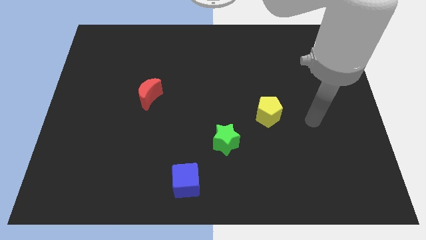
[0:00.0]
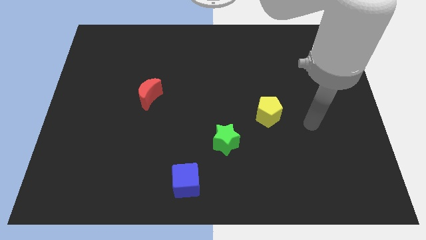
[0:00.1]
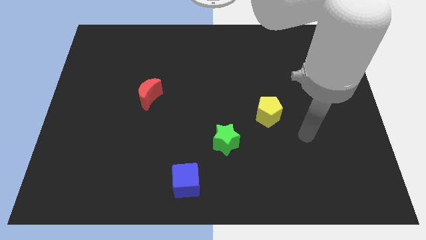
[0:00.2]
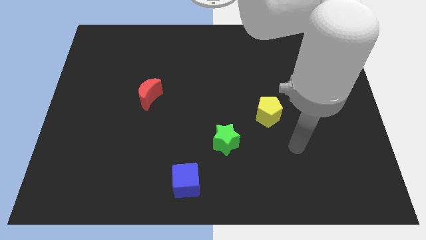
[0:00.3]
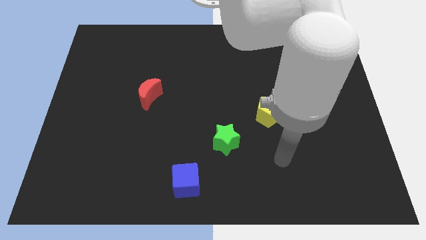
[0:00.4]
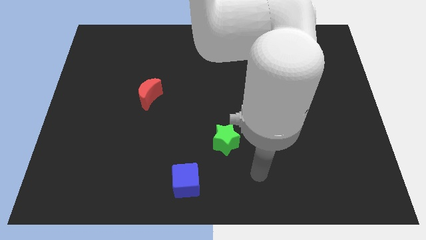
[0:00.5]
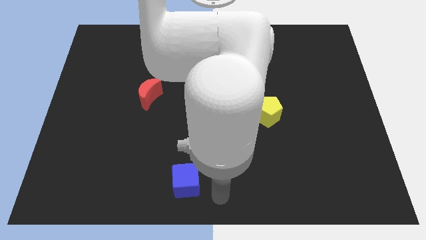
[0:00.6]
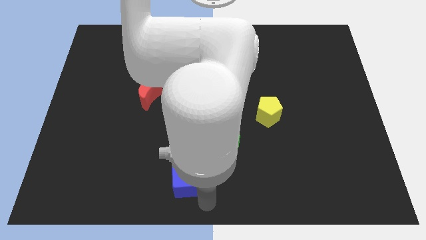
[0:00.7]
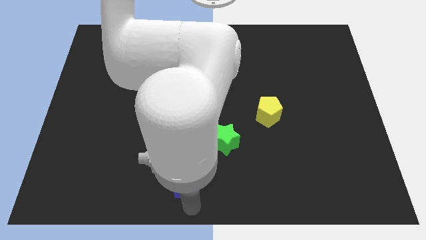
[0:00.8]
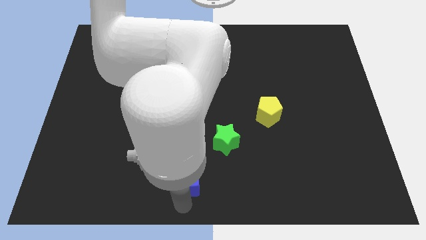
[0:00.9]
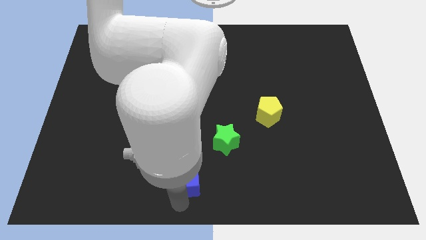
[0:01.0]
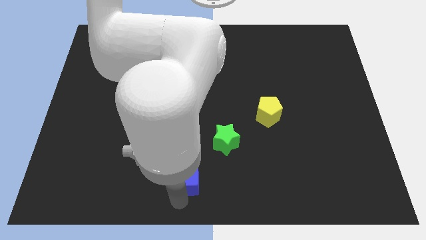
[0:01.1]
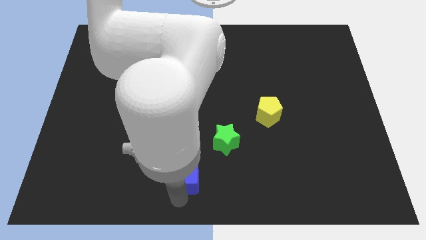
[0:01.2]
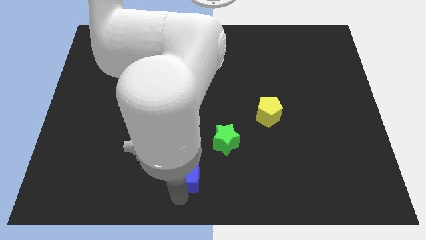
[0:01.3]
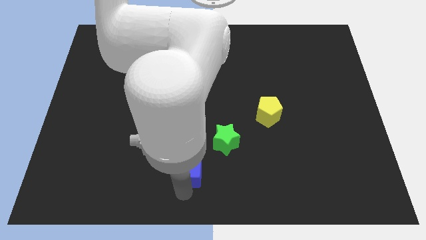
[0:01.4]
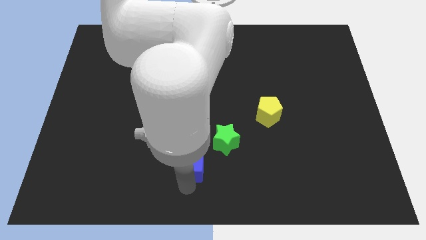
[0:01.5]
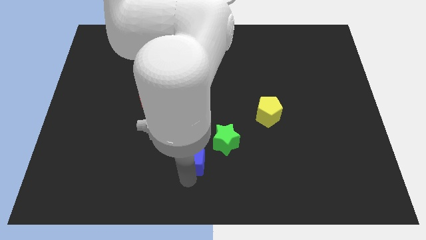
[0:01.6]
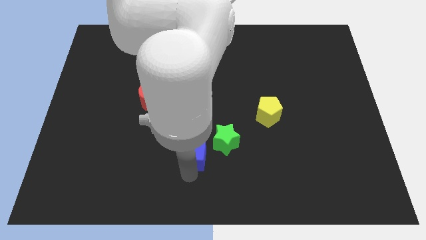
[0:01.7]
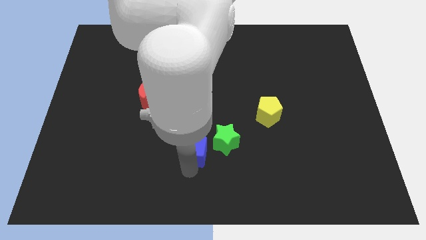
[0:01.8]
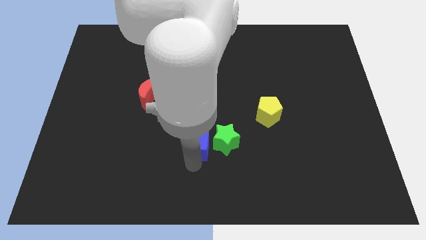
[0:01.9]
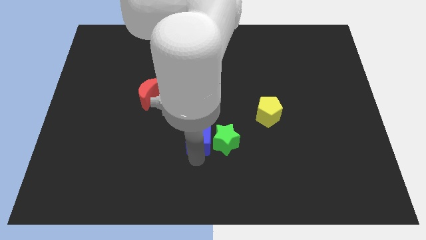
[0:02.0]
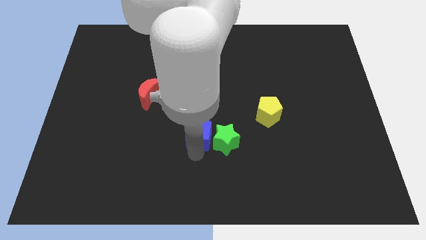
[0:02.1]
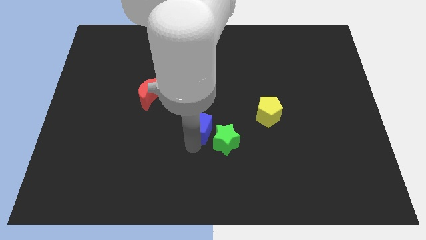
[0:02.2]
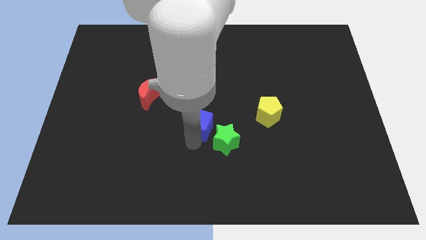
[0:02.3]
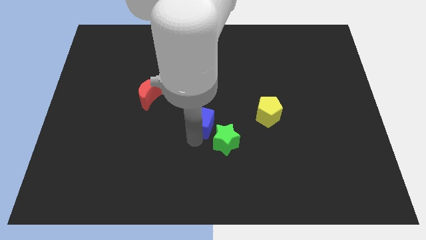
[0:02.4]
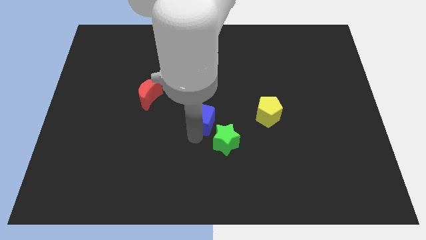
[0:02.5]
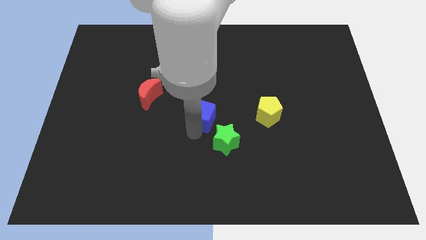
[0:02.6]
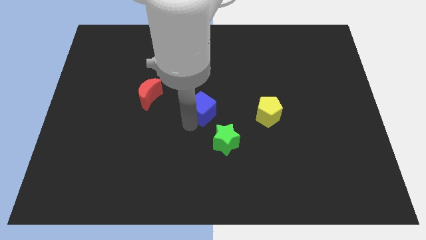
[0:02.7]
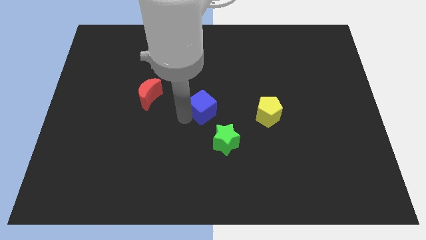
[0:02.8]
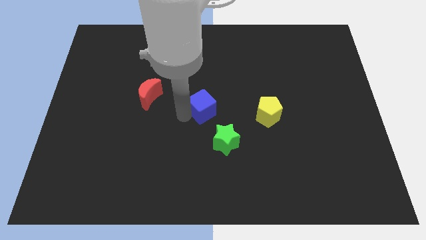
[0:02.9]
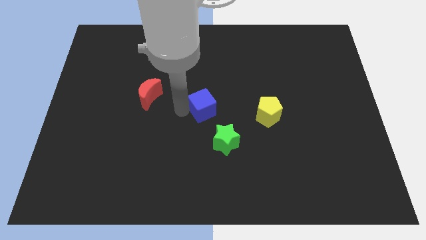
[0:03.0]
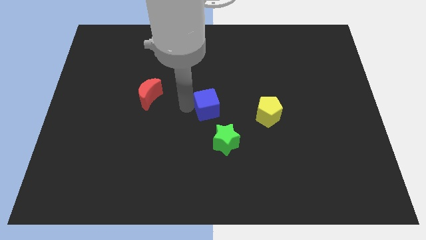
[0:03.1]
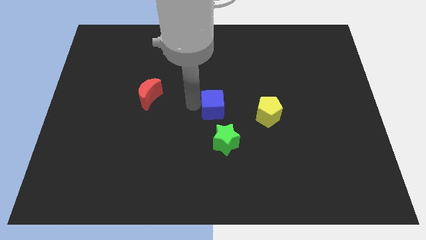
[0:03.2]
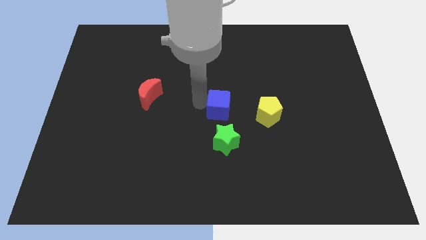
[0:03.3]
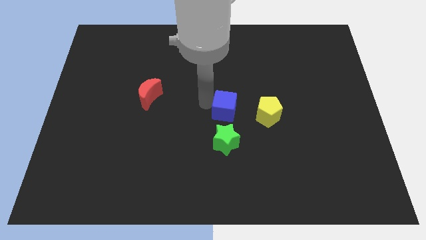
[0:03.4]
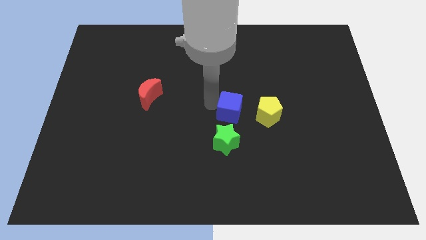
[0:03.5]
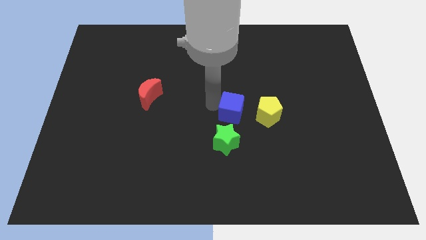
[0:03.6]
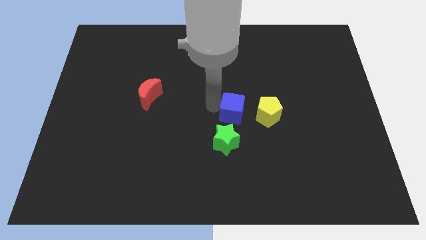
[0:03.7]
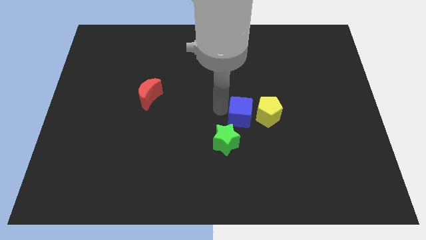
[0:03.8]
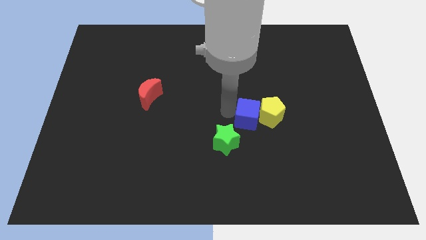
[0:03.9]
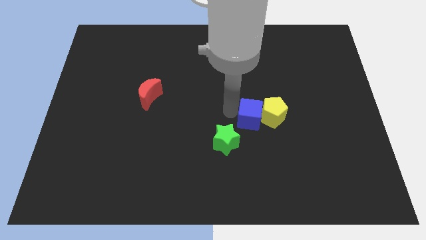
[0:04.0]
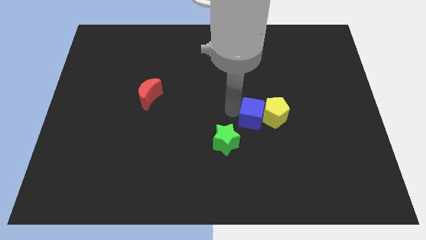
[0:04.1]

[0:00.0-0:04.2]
slide the blue block towards the pentagon

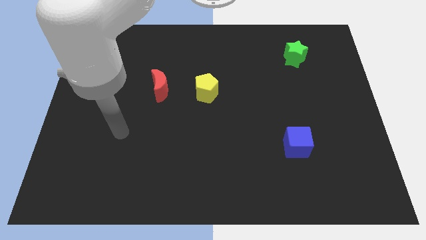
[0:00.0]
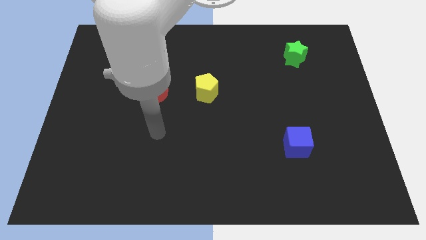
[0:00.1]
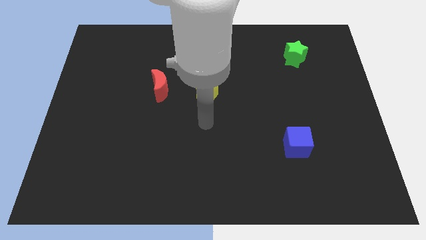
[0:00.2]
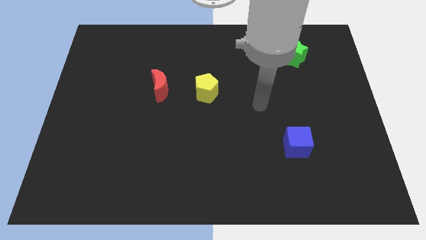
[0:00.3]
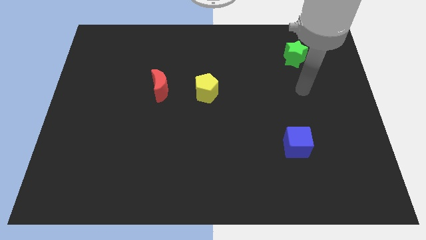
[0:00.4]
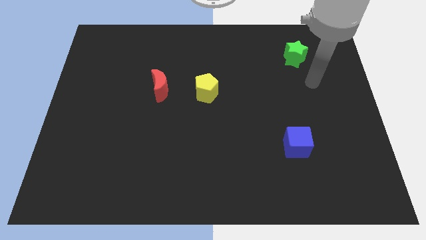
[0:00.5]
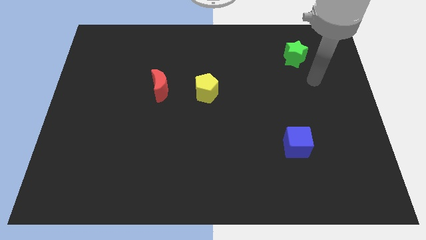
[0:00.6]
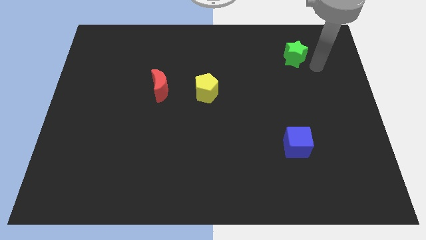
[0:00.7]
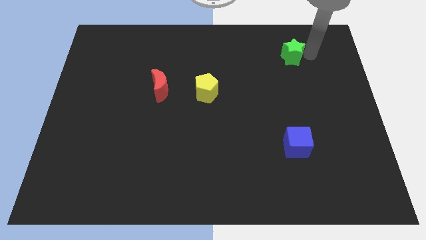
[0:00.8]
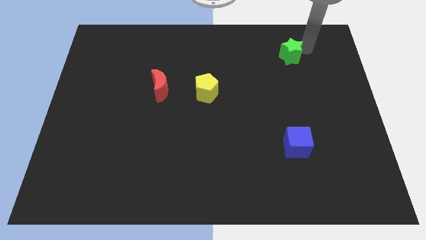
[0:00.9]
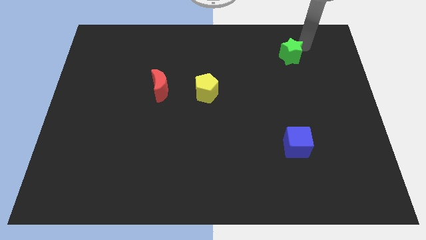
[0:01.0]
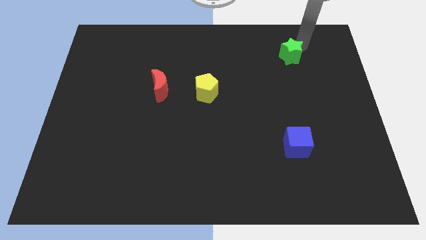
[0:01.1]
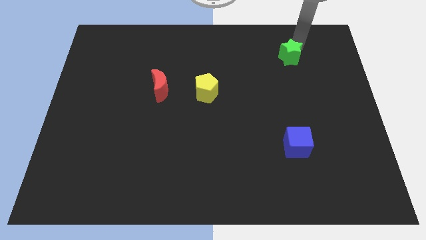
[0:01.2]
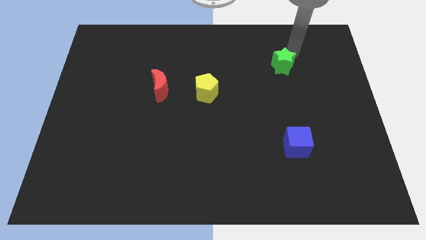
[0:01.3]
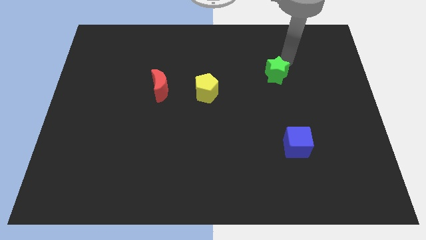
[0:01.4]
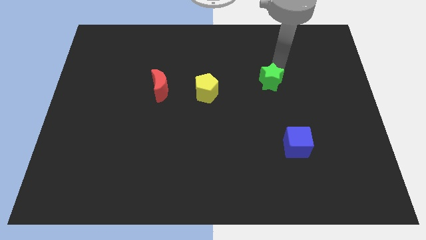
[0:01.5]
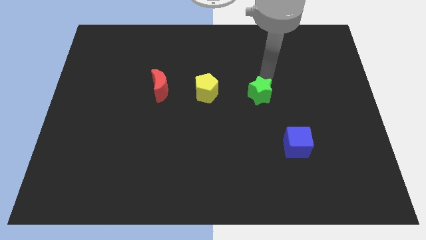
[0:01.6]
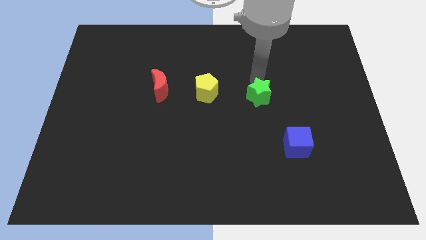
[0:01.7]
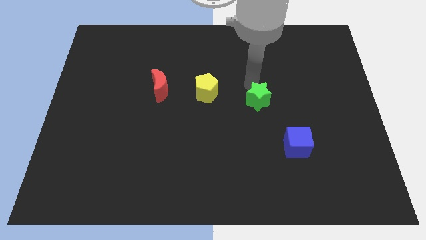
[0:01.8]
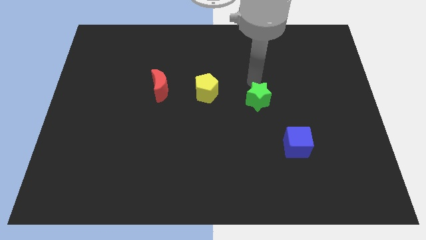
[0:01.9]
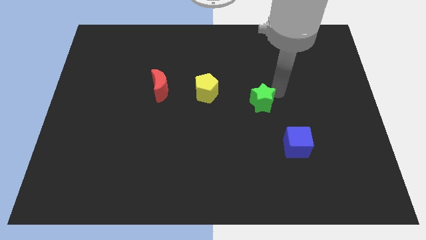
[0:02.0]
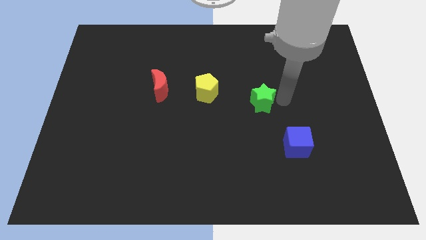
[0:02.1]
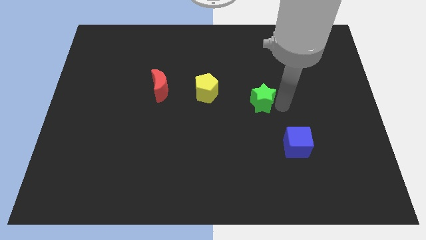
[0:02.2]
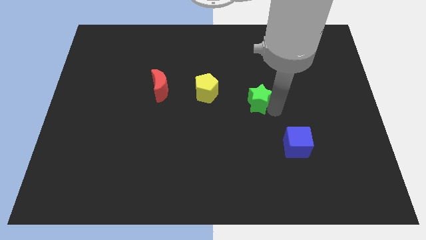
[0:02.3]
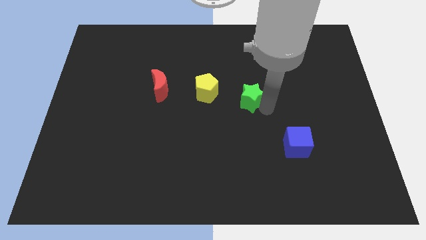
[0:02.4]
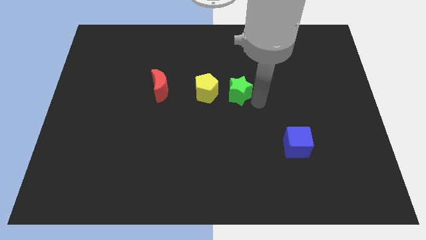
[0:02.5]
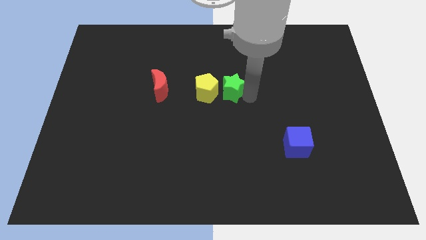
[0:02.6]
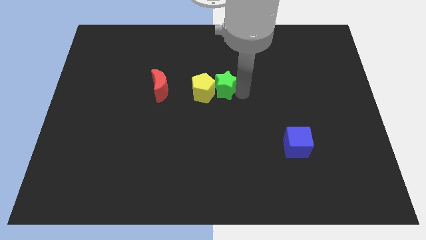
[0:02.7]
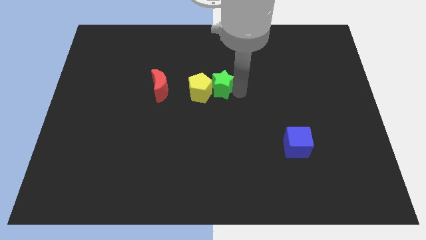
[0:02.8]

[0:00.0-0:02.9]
move the green star towards the yellow pentagon

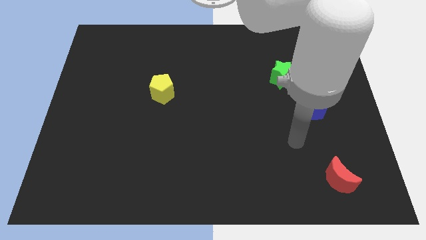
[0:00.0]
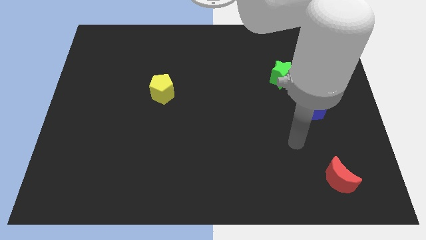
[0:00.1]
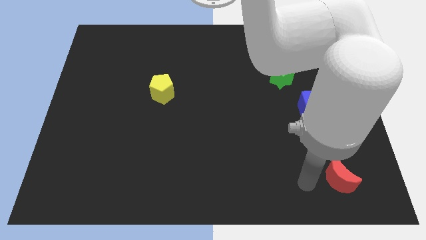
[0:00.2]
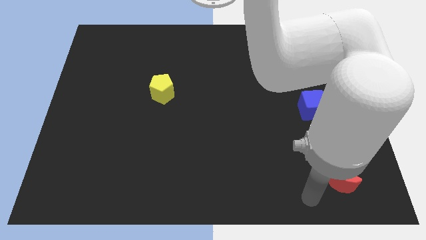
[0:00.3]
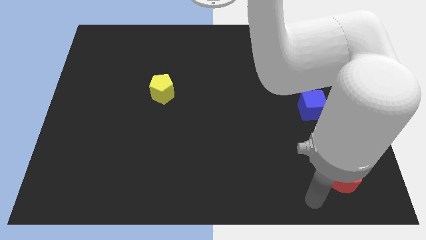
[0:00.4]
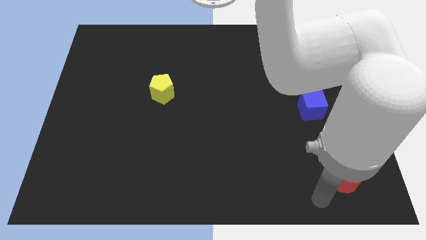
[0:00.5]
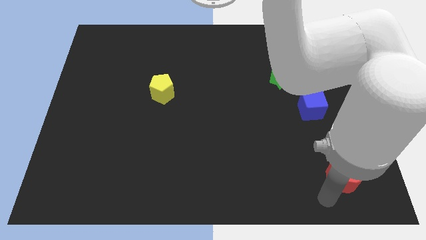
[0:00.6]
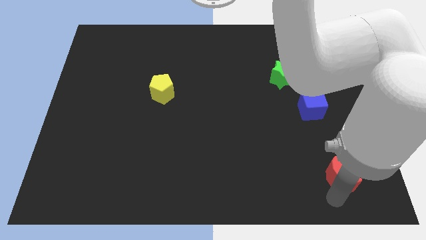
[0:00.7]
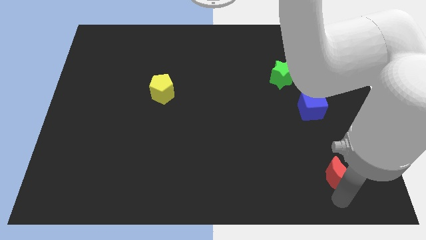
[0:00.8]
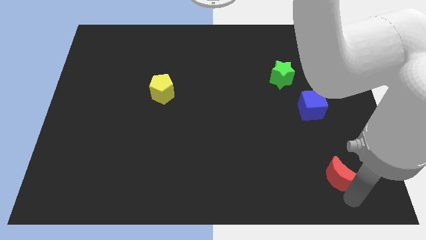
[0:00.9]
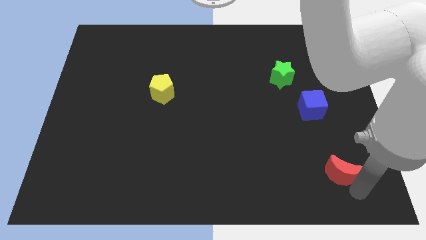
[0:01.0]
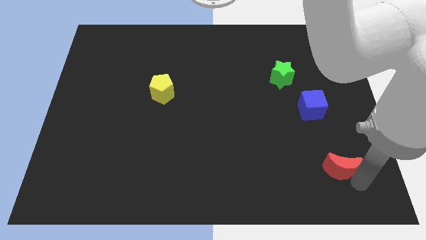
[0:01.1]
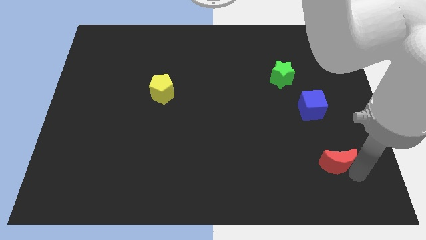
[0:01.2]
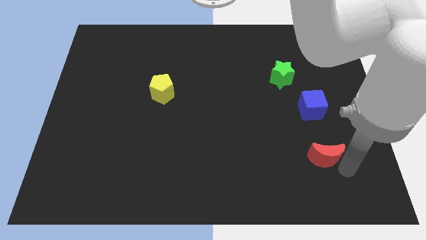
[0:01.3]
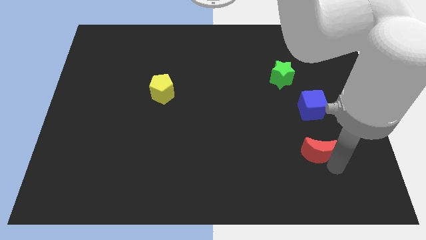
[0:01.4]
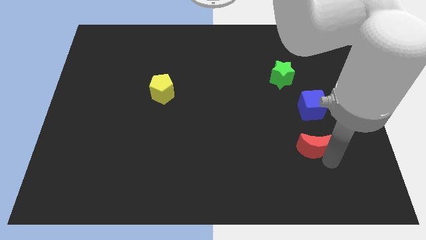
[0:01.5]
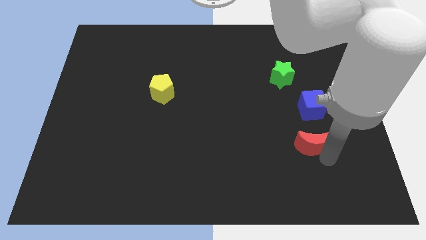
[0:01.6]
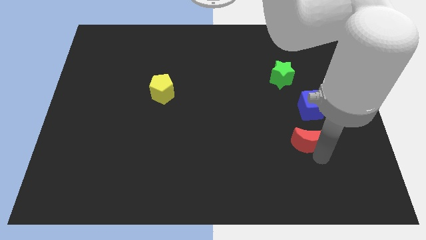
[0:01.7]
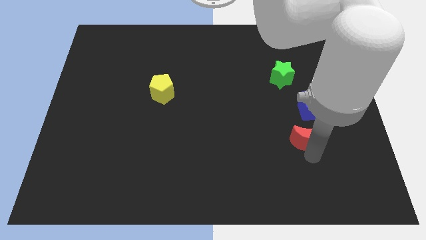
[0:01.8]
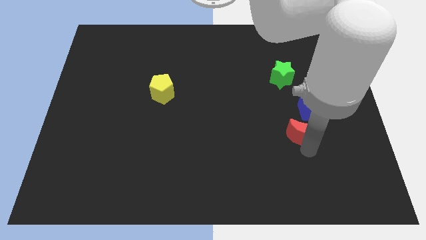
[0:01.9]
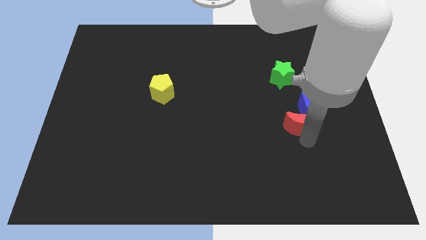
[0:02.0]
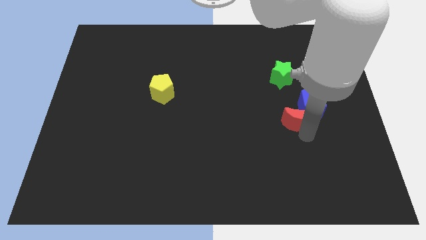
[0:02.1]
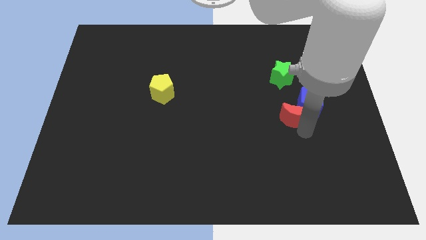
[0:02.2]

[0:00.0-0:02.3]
push the red moon next to the blue block
